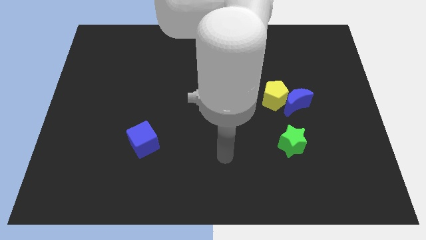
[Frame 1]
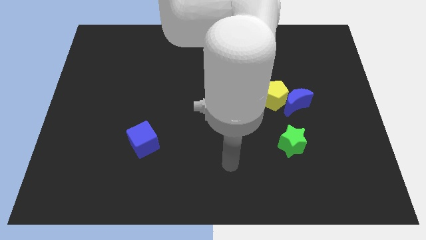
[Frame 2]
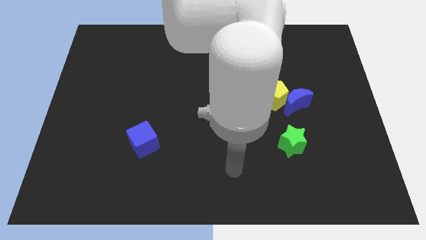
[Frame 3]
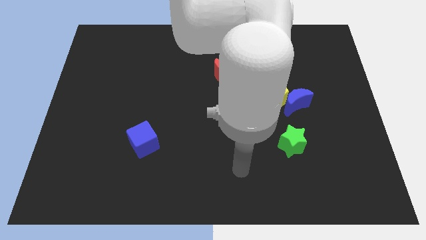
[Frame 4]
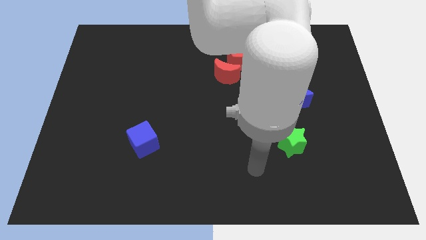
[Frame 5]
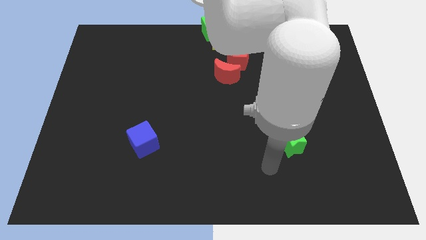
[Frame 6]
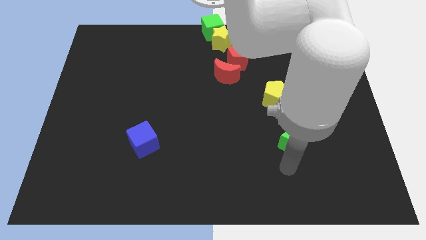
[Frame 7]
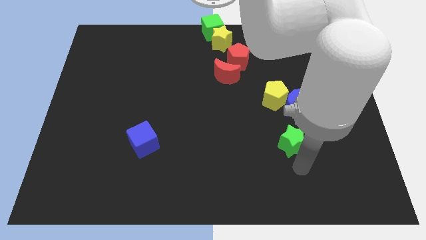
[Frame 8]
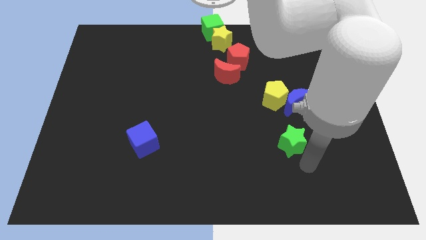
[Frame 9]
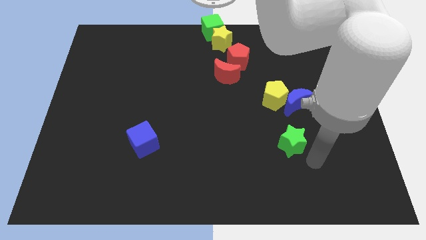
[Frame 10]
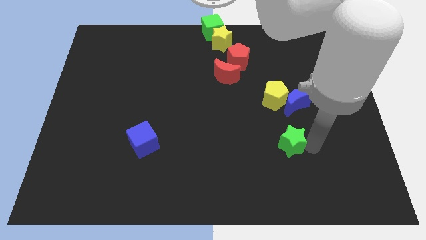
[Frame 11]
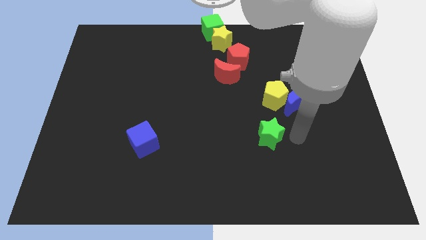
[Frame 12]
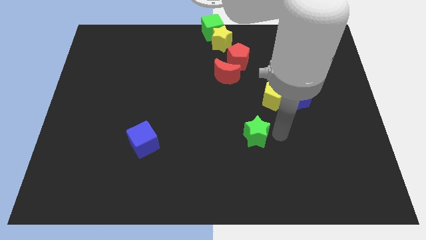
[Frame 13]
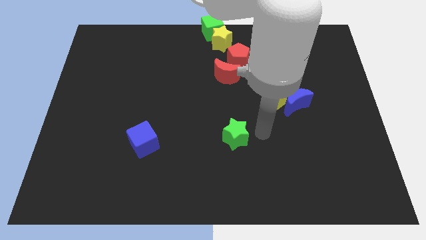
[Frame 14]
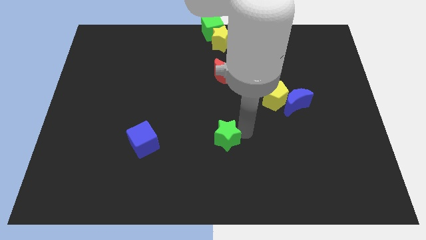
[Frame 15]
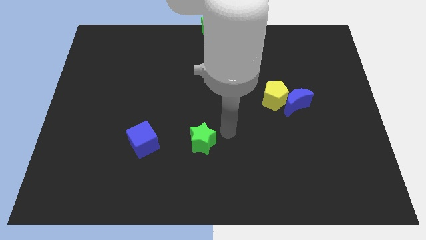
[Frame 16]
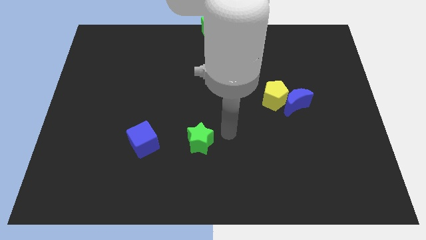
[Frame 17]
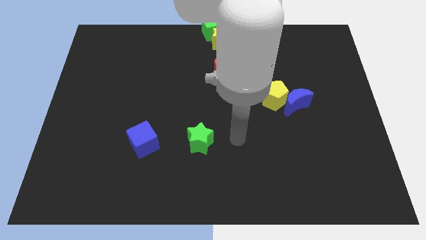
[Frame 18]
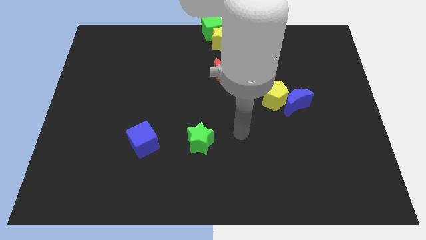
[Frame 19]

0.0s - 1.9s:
move the green star towards the left

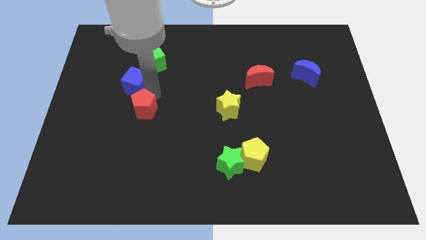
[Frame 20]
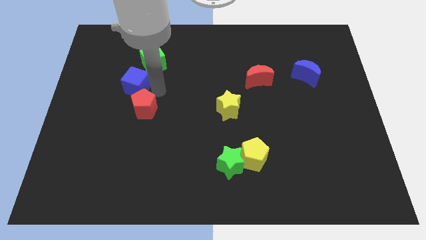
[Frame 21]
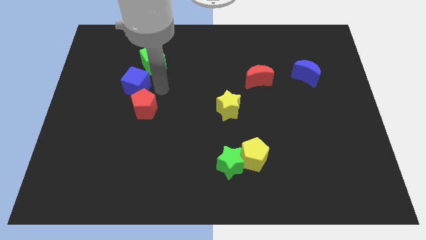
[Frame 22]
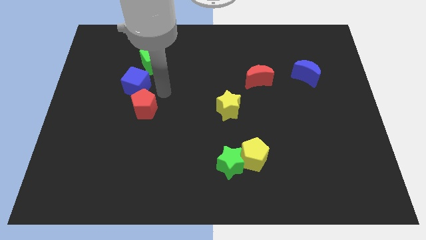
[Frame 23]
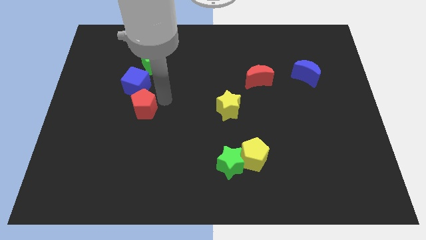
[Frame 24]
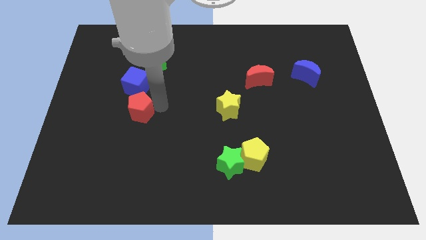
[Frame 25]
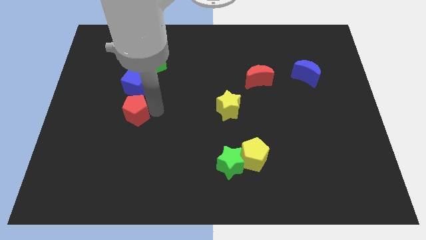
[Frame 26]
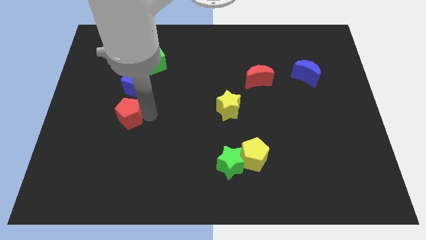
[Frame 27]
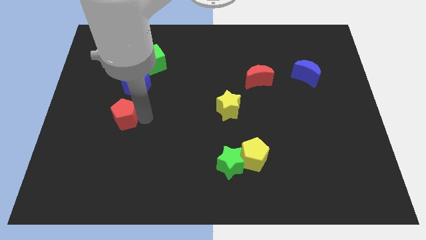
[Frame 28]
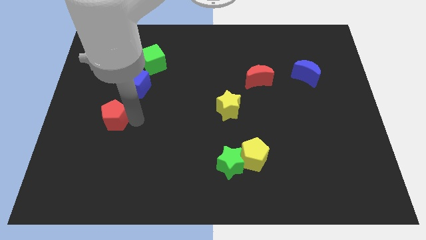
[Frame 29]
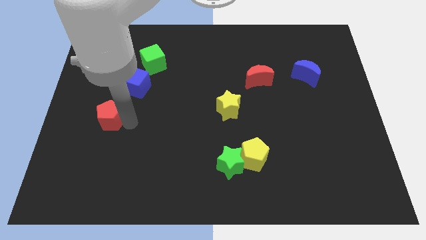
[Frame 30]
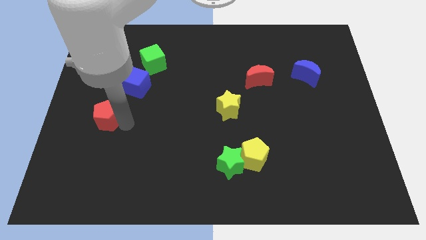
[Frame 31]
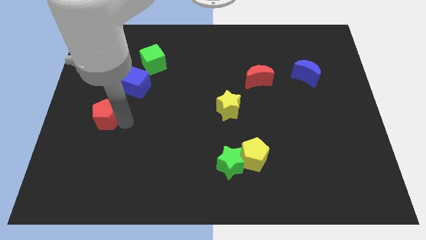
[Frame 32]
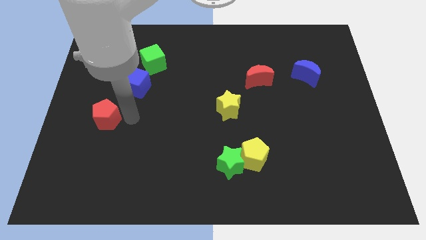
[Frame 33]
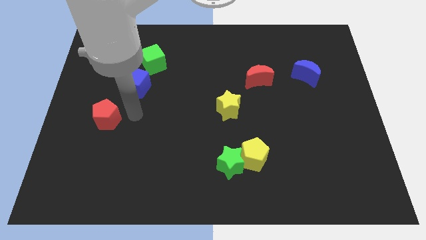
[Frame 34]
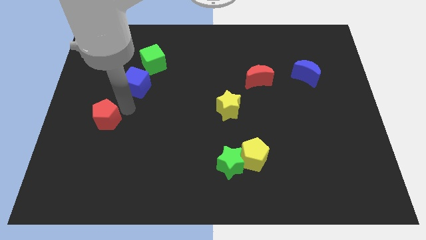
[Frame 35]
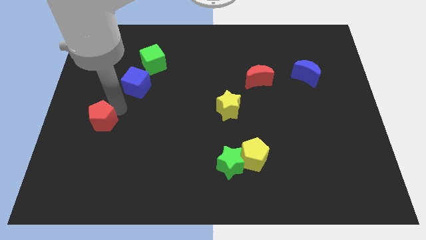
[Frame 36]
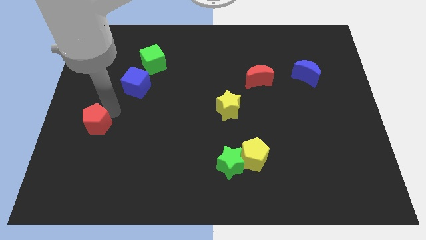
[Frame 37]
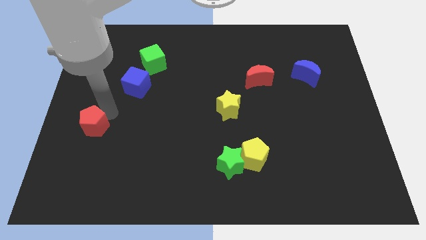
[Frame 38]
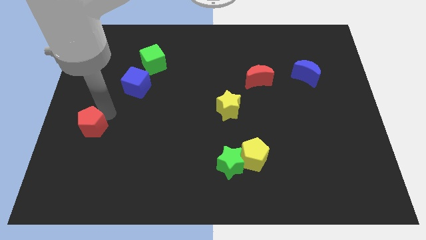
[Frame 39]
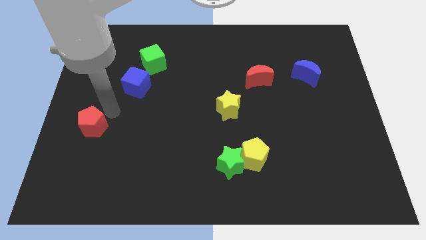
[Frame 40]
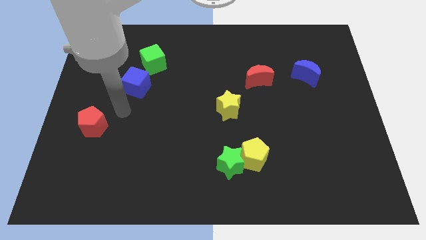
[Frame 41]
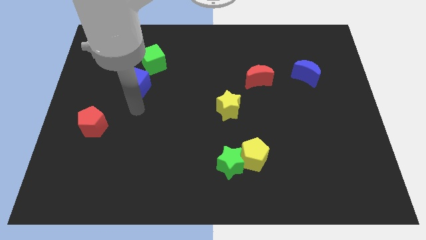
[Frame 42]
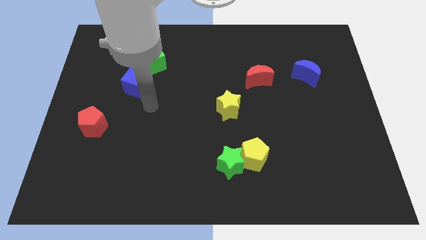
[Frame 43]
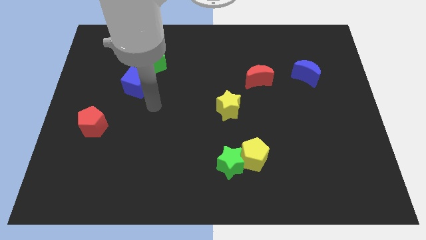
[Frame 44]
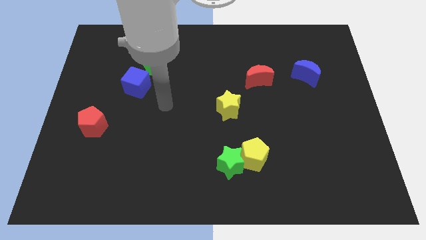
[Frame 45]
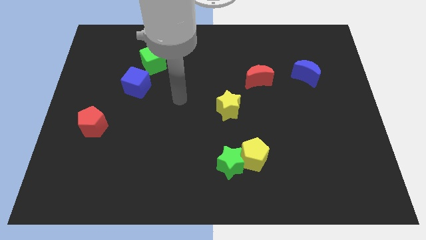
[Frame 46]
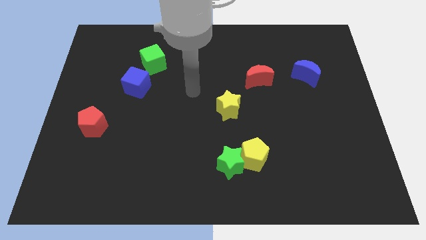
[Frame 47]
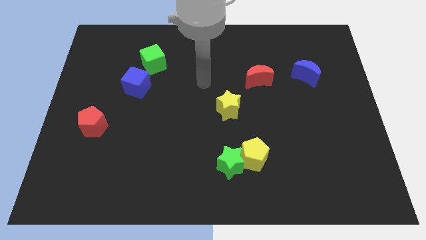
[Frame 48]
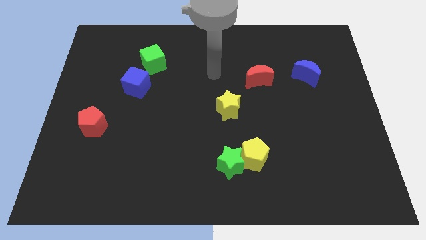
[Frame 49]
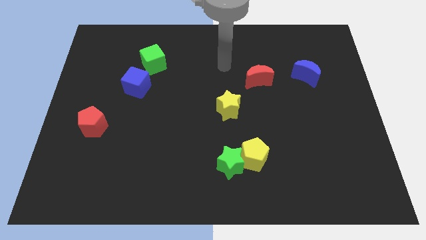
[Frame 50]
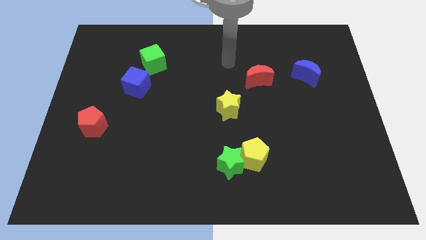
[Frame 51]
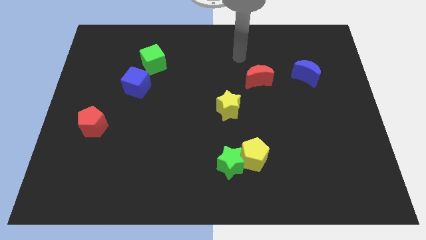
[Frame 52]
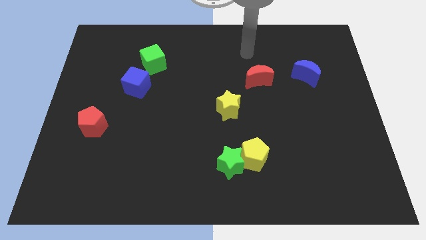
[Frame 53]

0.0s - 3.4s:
move the red pentagon to the left side of the board

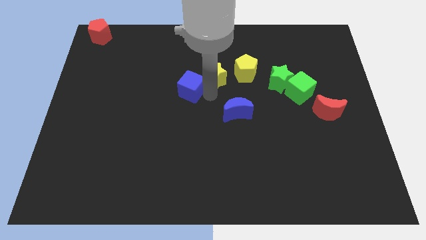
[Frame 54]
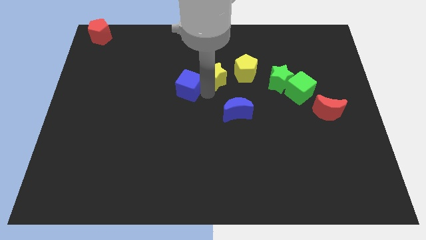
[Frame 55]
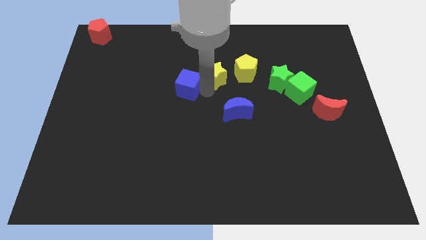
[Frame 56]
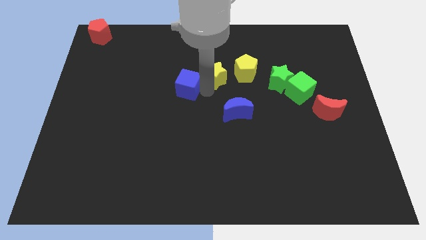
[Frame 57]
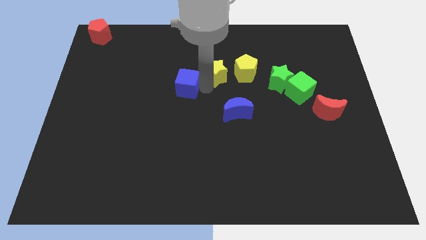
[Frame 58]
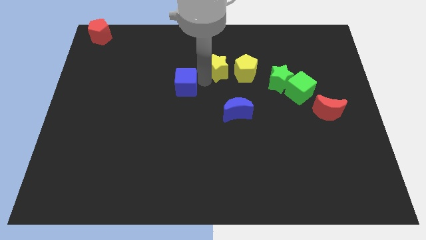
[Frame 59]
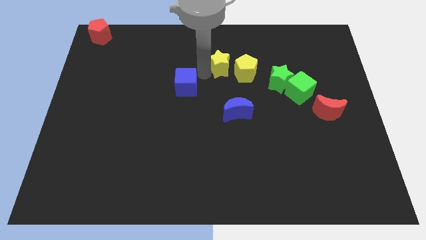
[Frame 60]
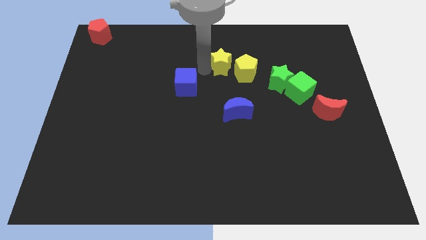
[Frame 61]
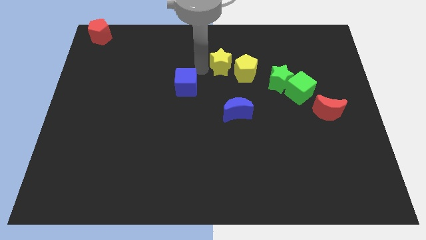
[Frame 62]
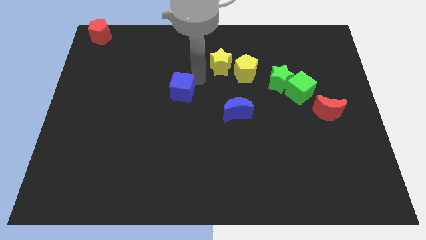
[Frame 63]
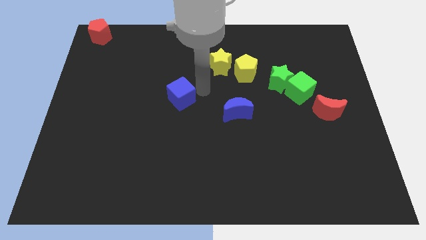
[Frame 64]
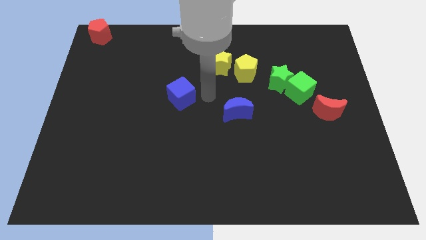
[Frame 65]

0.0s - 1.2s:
separate blue cube and yellow star

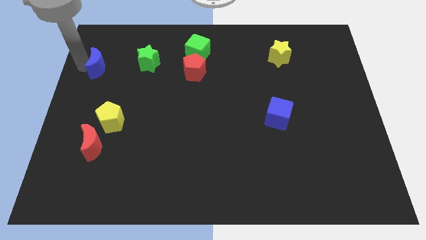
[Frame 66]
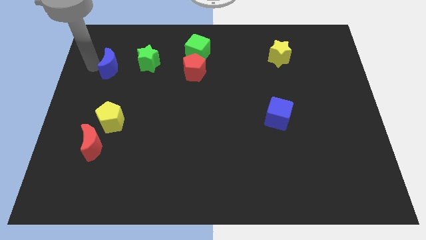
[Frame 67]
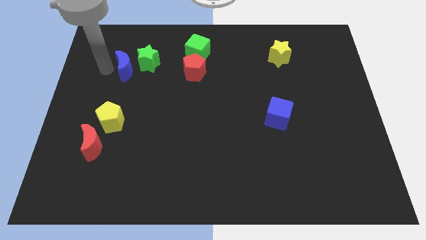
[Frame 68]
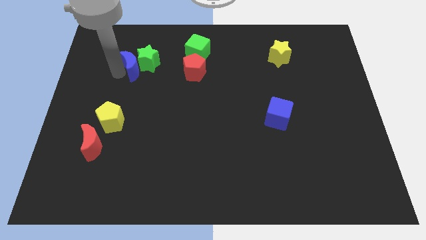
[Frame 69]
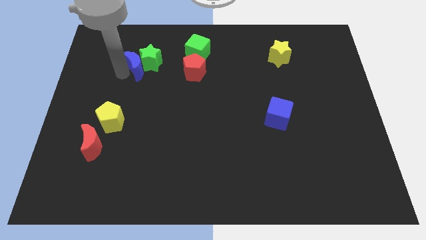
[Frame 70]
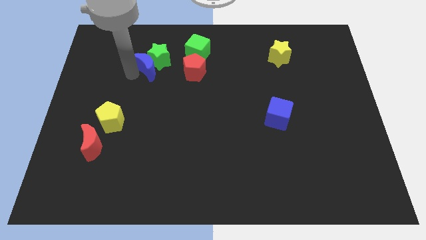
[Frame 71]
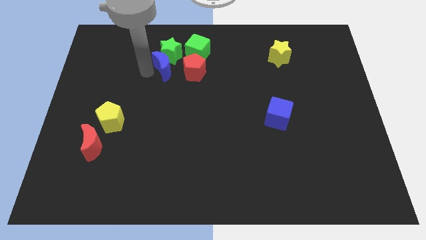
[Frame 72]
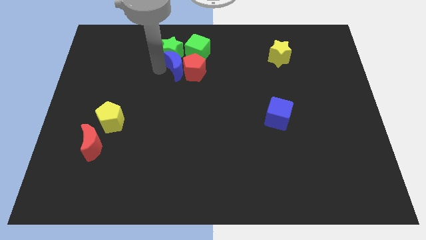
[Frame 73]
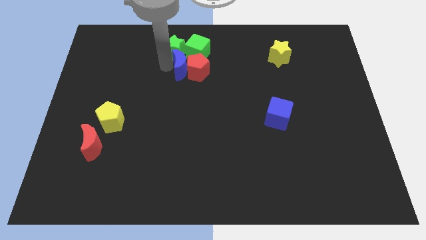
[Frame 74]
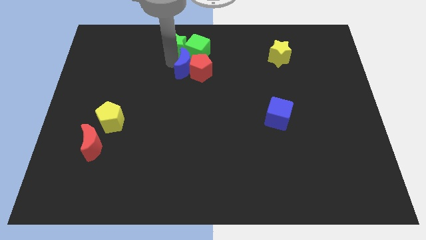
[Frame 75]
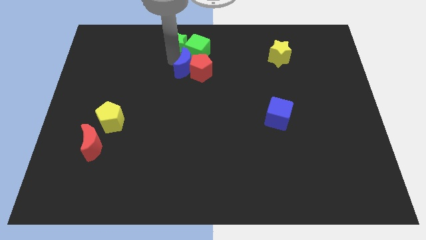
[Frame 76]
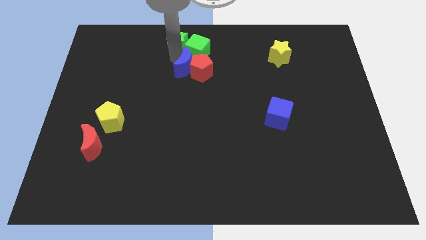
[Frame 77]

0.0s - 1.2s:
place blue moon to the left of red pentagon

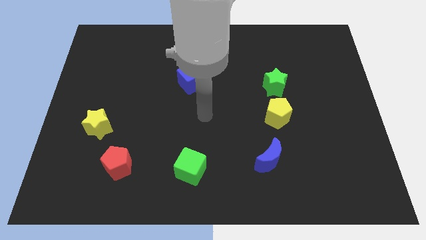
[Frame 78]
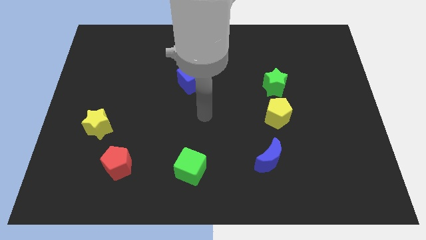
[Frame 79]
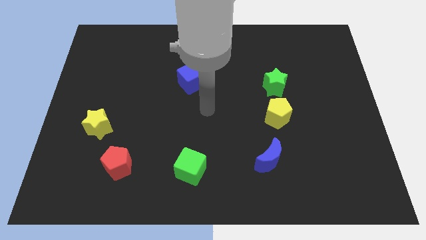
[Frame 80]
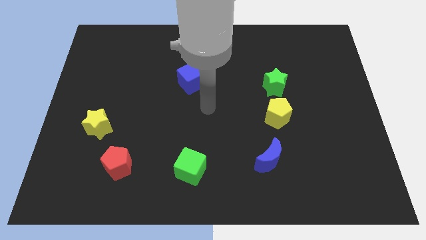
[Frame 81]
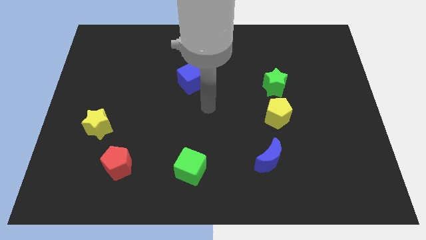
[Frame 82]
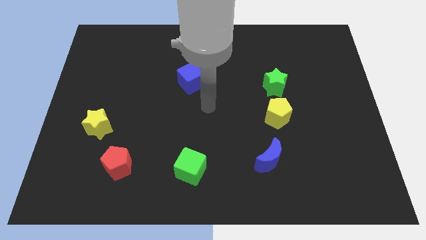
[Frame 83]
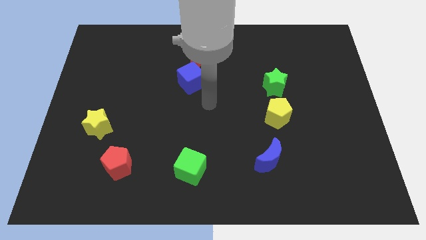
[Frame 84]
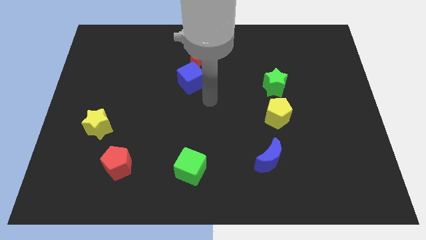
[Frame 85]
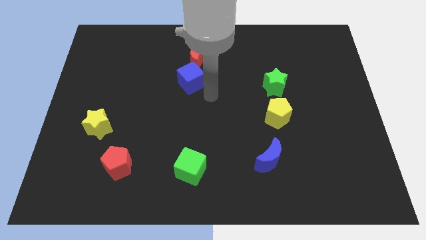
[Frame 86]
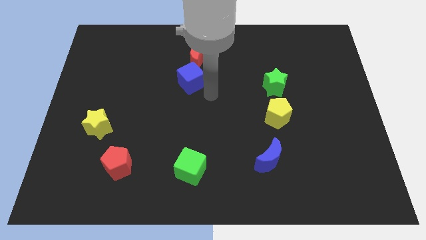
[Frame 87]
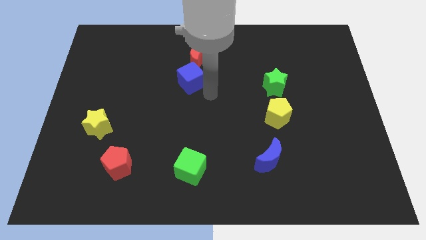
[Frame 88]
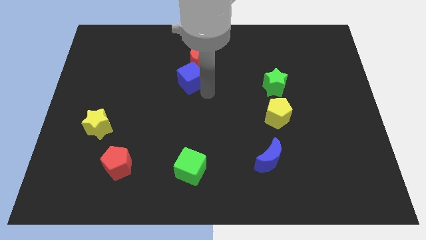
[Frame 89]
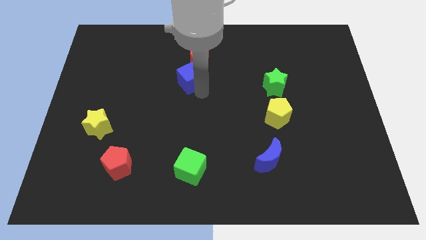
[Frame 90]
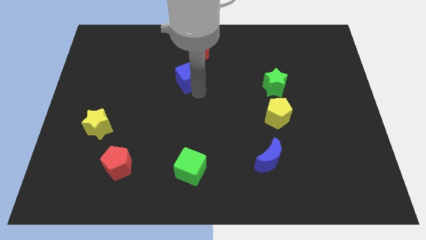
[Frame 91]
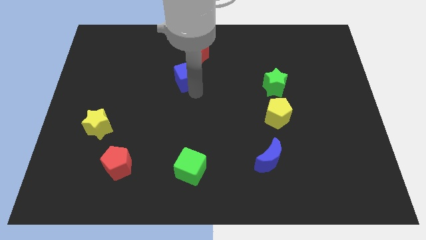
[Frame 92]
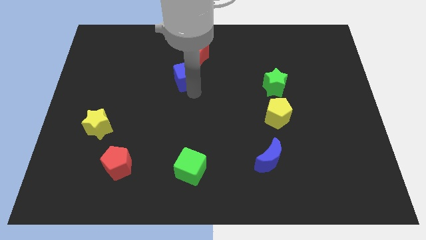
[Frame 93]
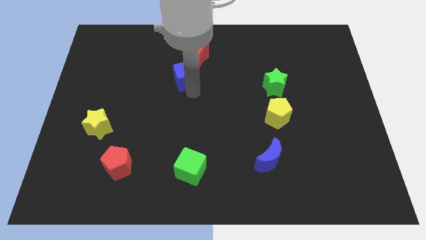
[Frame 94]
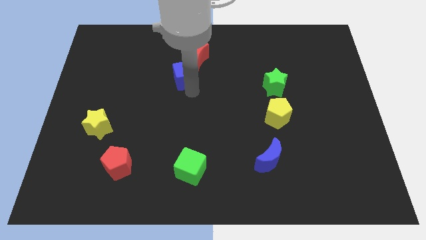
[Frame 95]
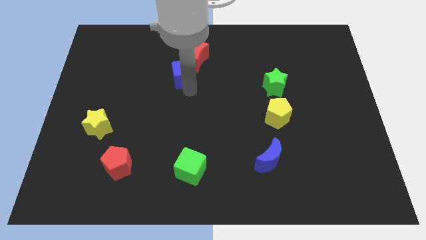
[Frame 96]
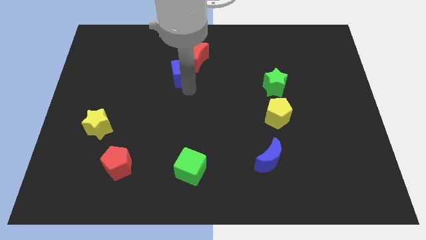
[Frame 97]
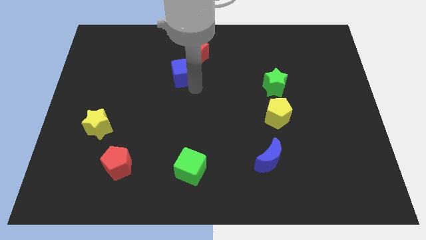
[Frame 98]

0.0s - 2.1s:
move blue cube slightly
